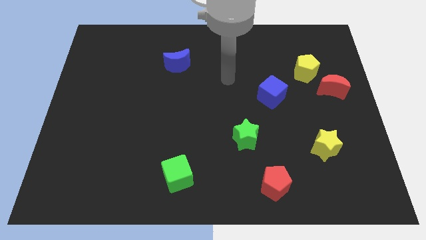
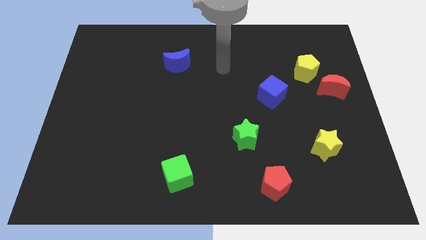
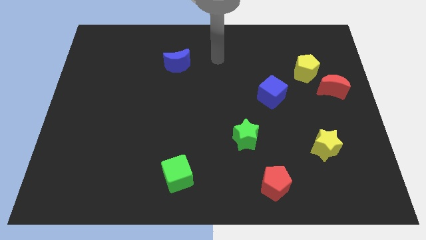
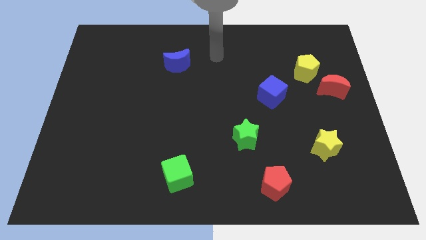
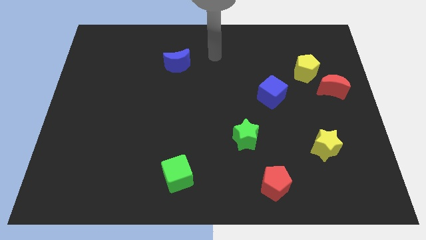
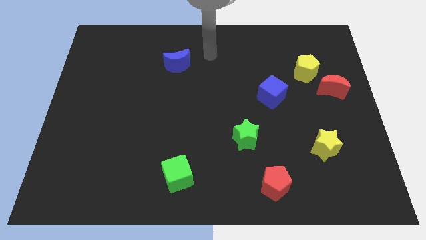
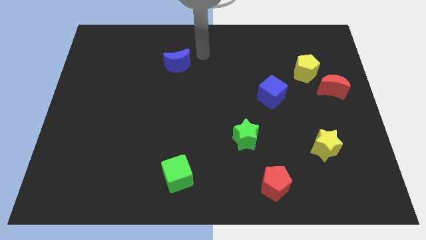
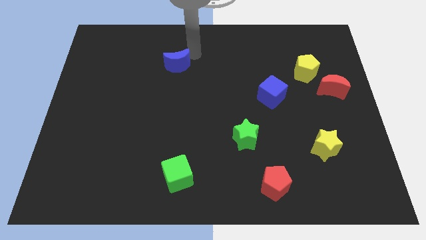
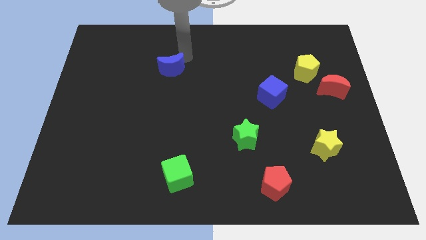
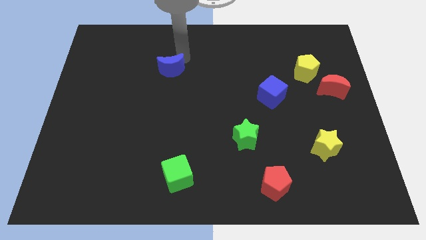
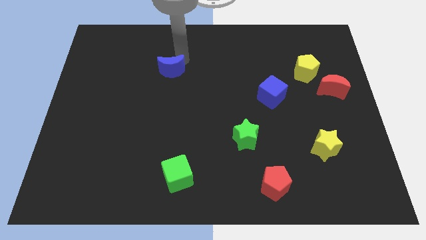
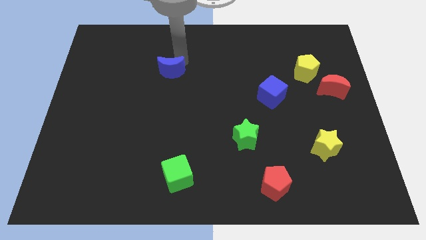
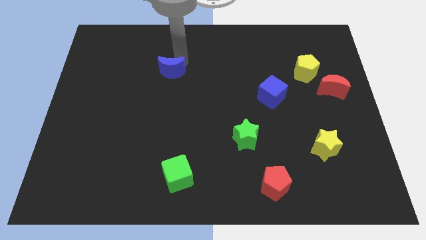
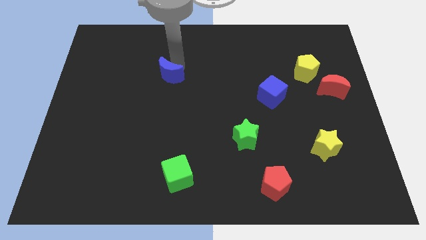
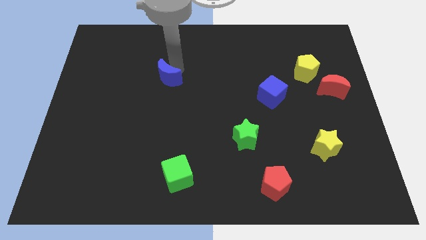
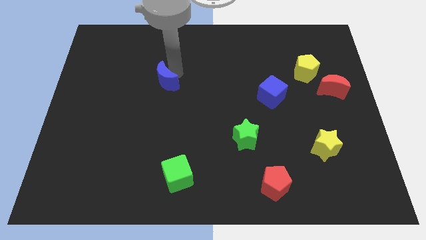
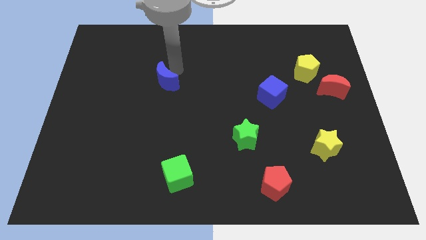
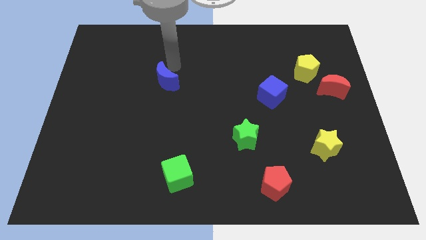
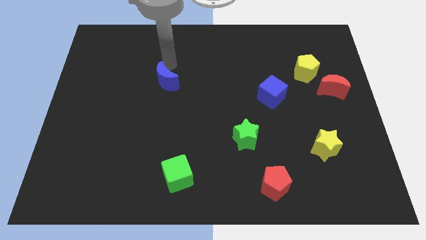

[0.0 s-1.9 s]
push the blue crescent to the bottom of th board

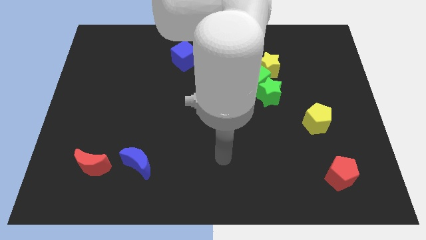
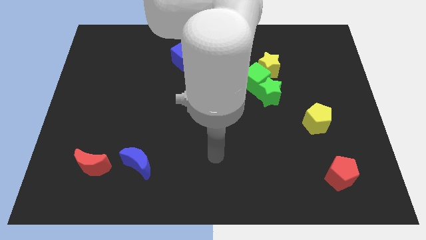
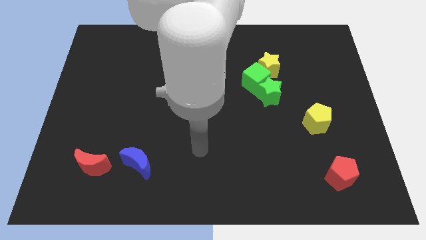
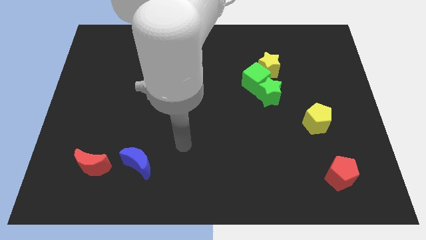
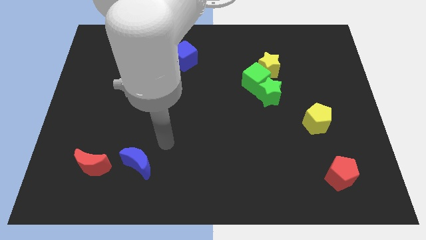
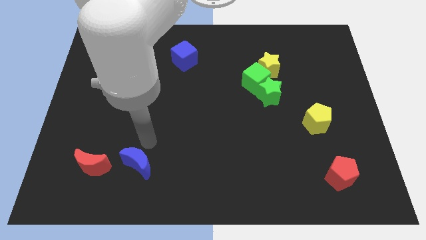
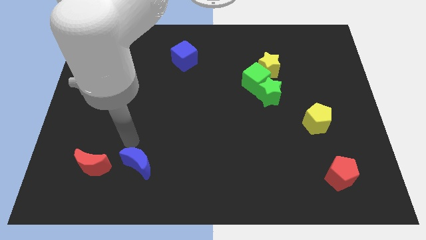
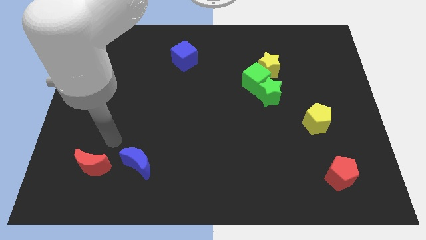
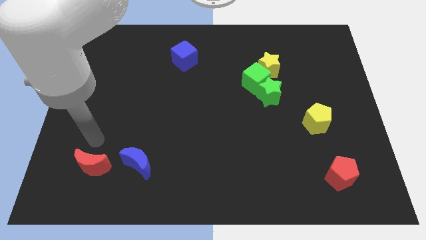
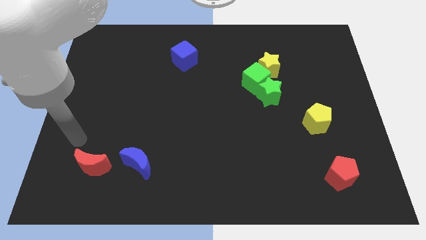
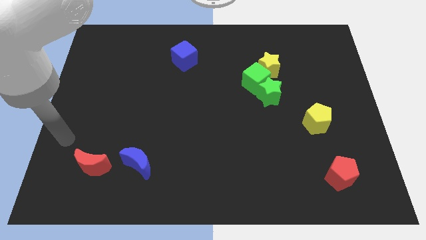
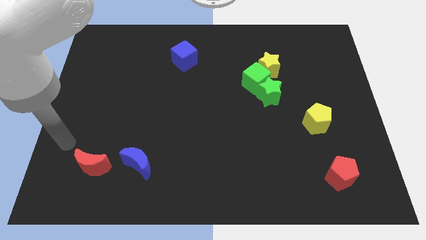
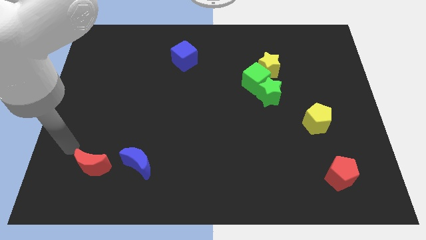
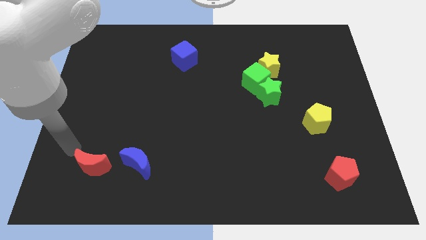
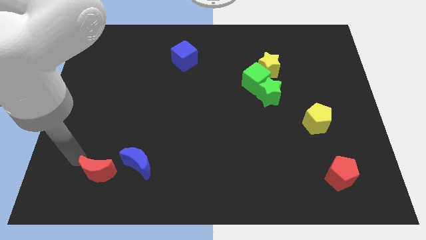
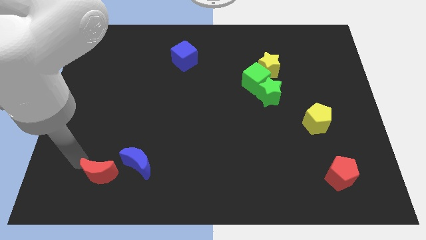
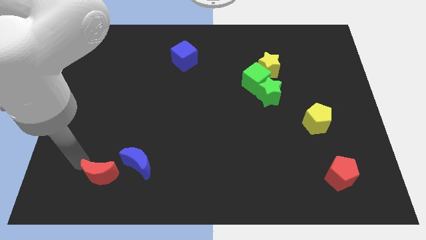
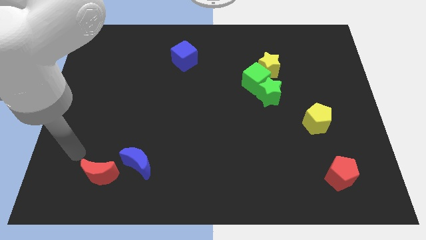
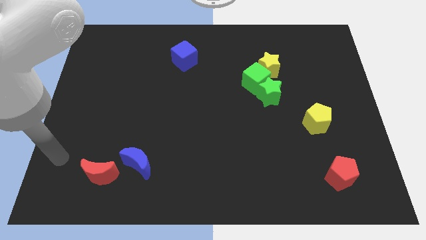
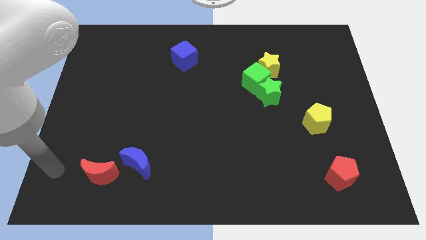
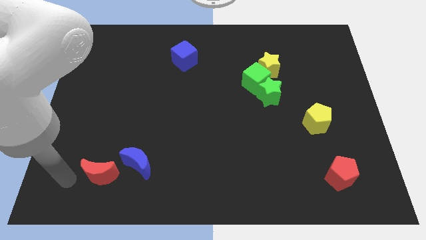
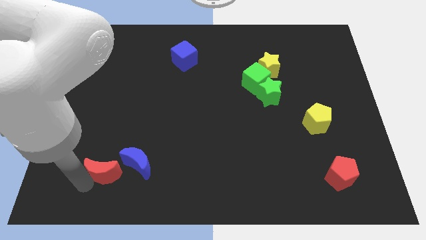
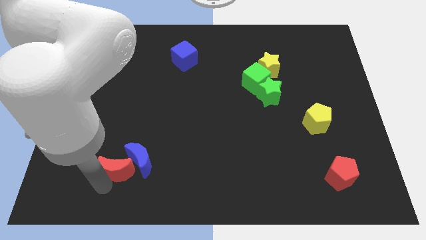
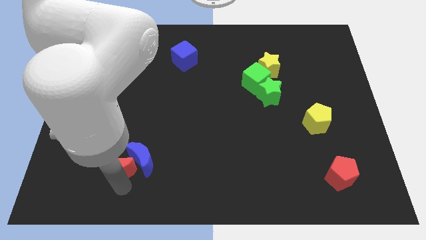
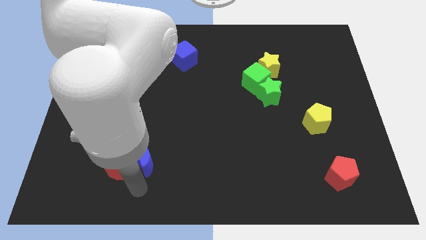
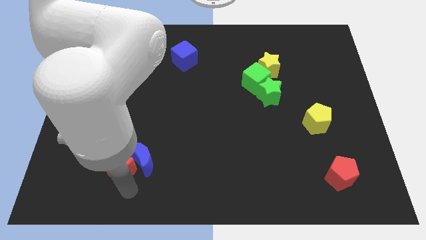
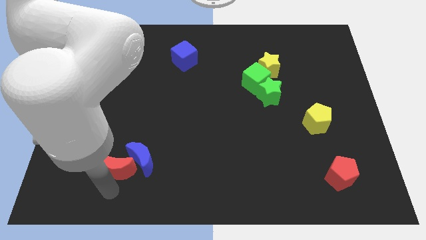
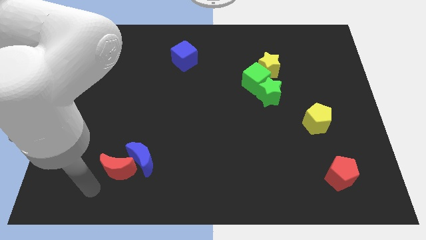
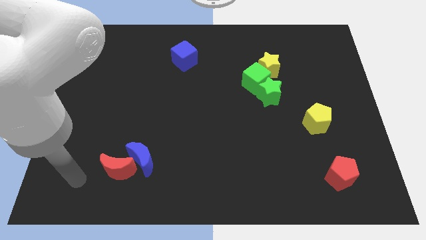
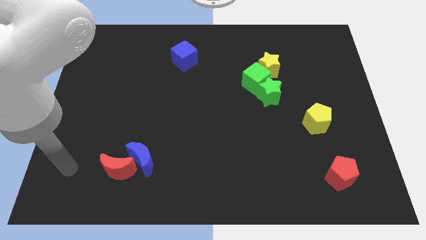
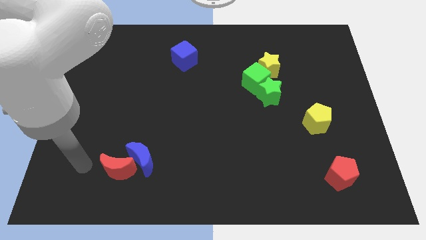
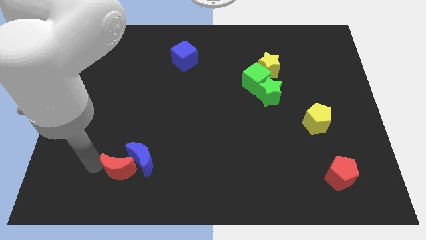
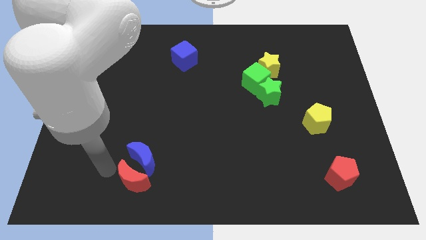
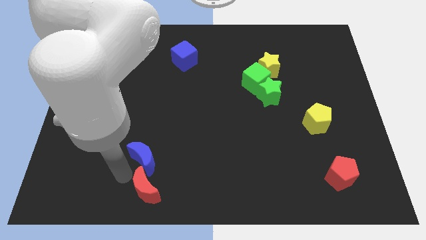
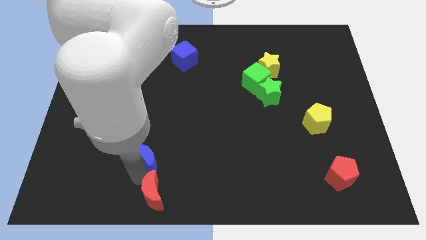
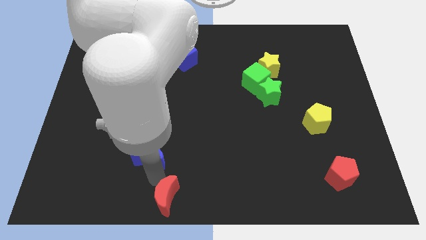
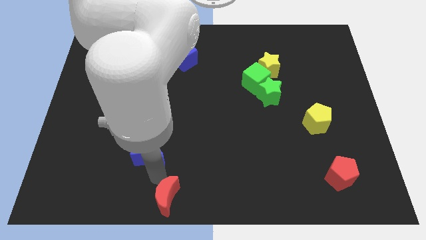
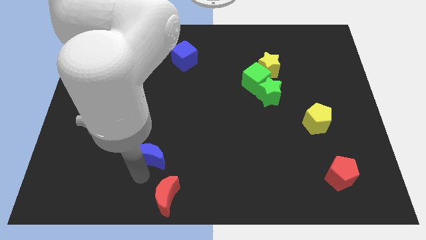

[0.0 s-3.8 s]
push the red moon towards the bottom center

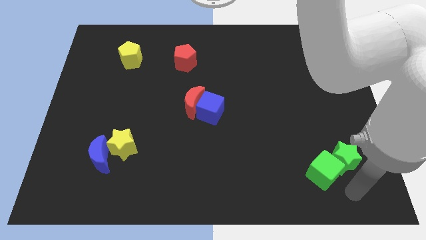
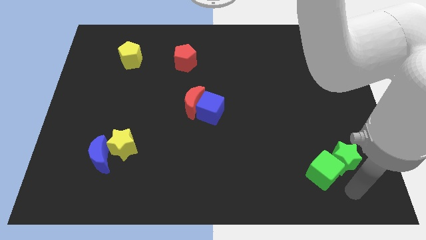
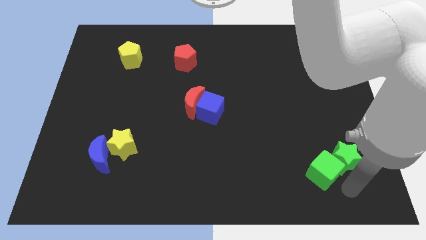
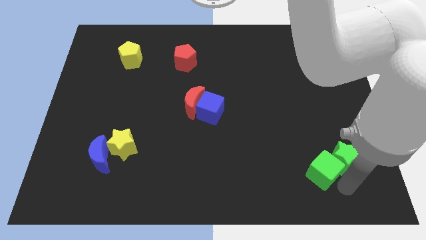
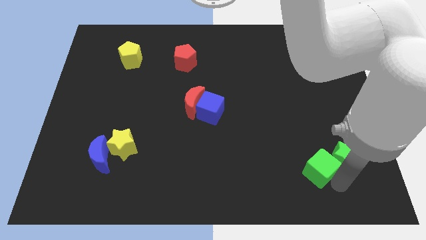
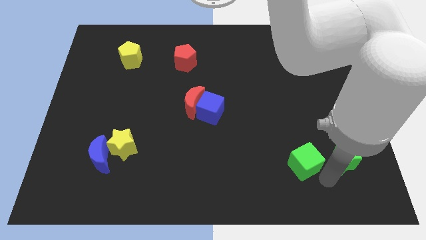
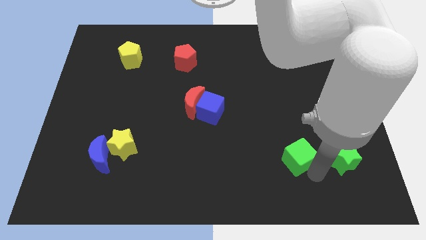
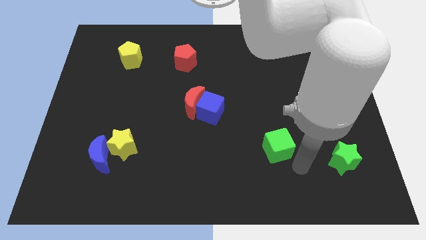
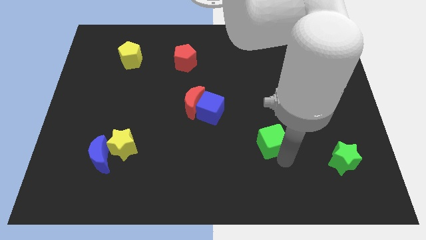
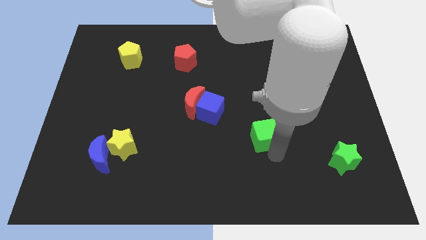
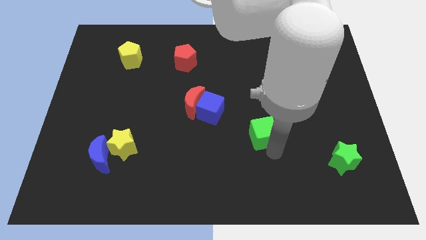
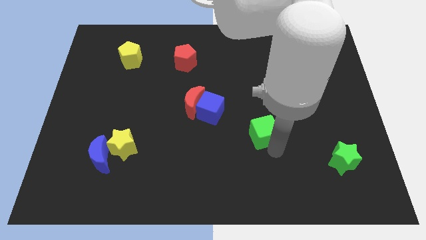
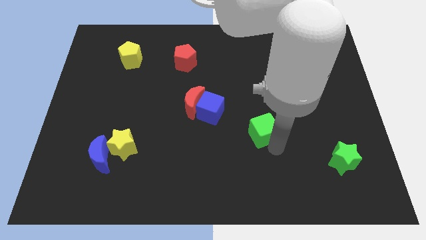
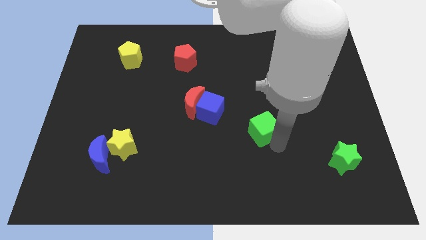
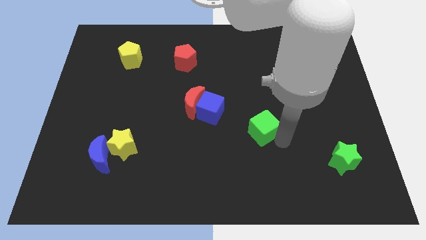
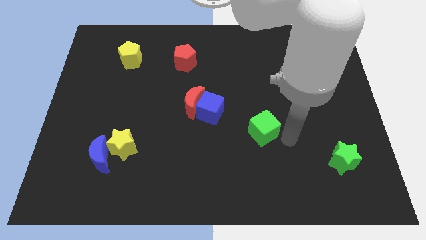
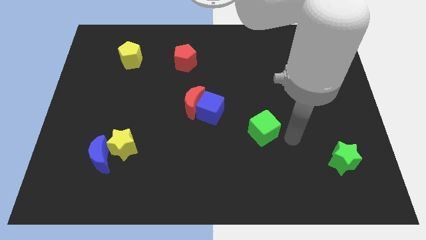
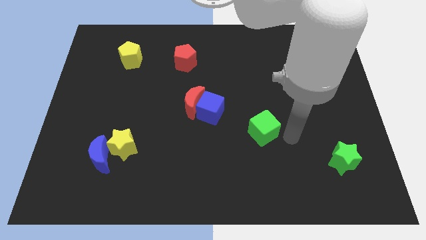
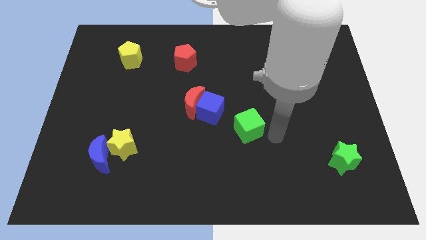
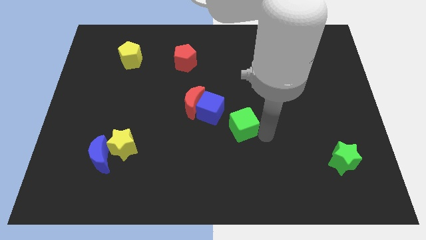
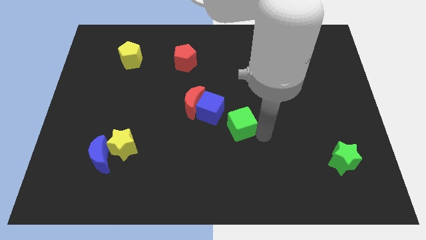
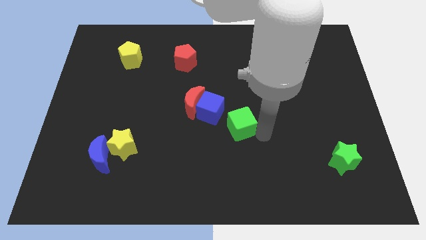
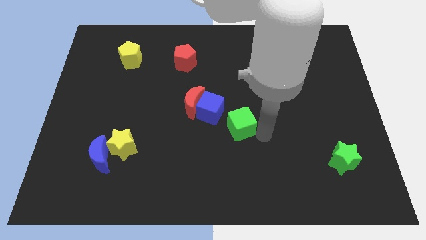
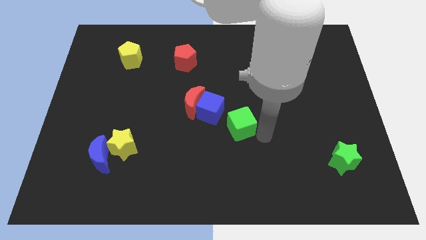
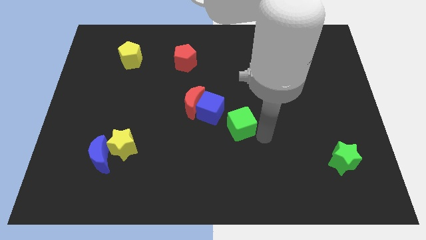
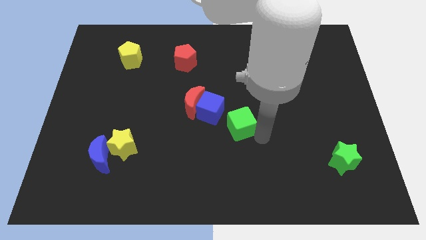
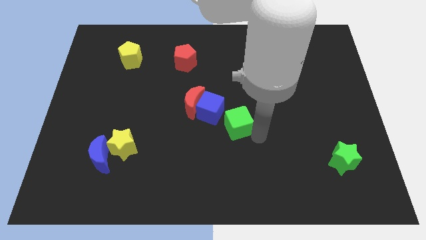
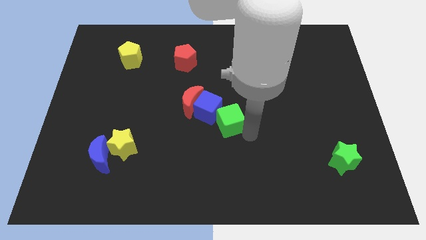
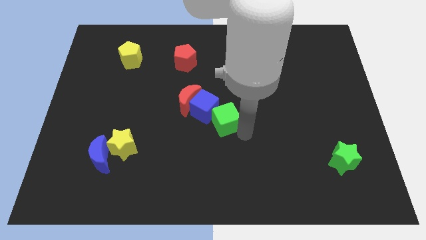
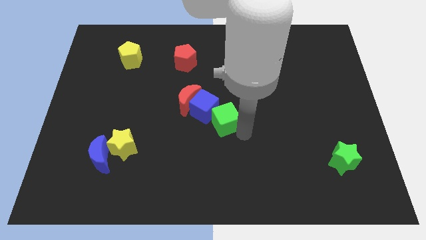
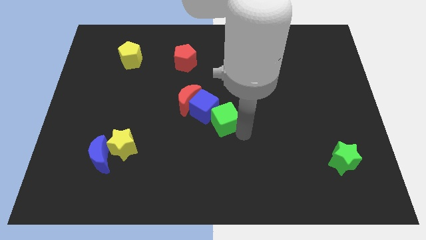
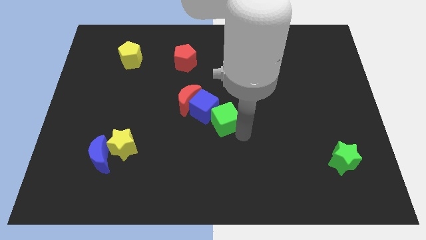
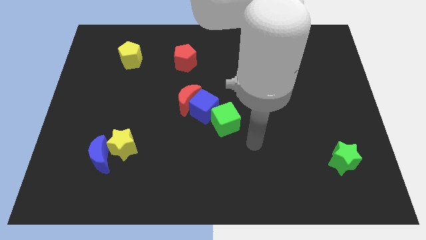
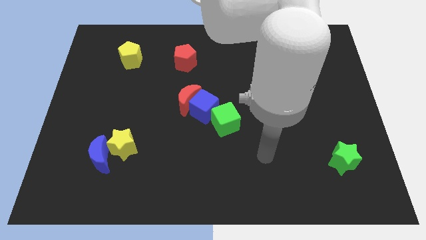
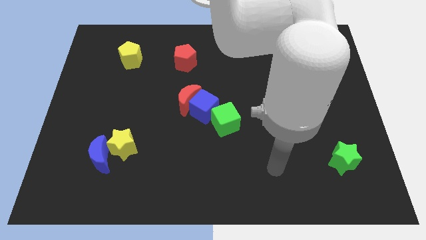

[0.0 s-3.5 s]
push the green cube into the blue cube
